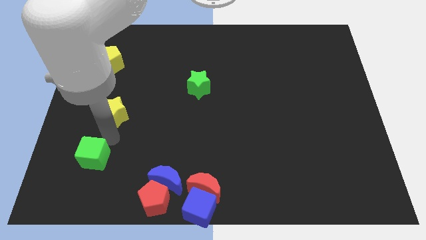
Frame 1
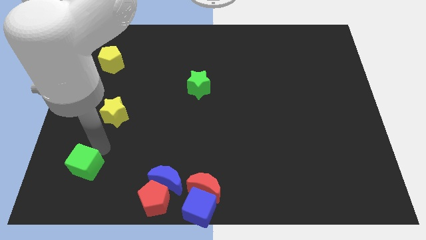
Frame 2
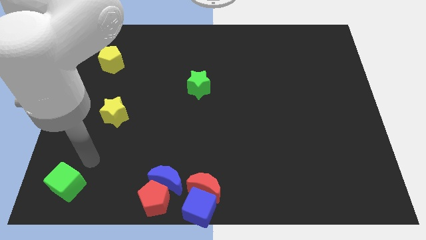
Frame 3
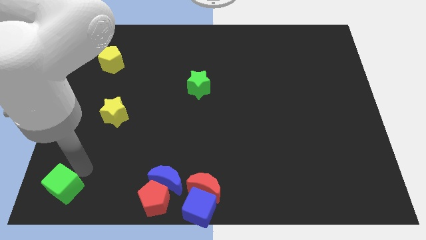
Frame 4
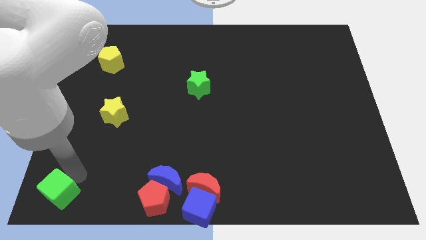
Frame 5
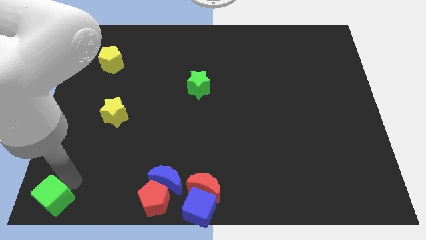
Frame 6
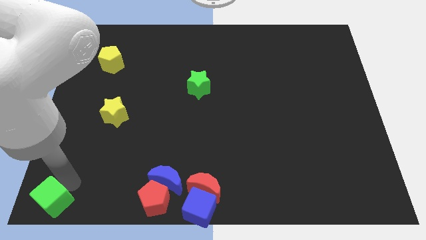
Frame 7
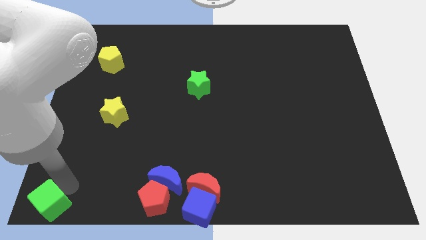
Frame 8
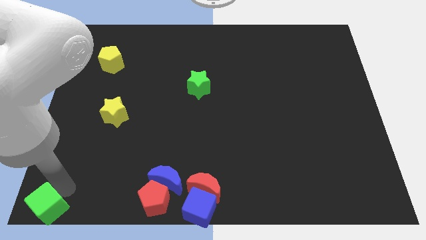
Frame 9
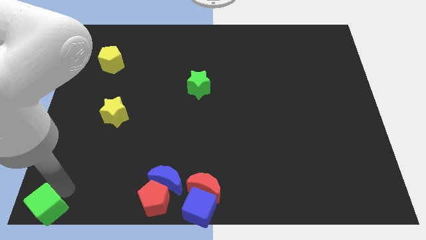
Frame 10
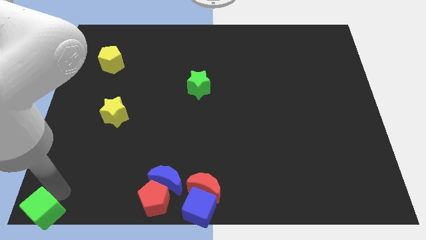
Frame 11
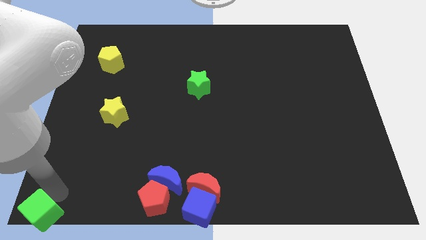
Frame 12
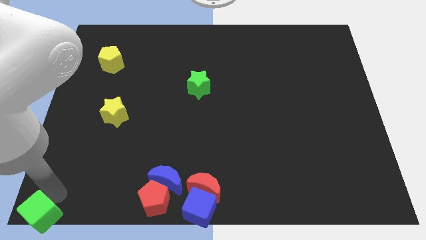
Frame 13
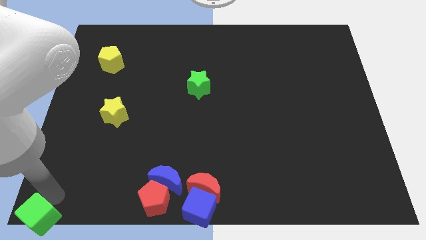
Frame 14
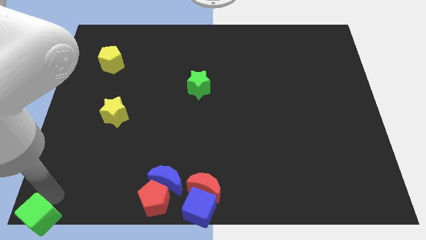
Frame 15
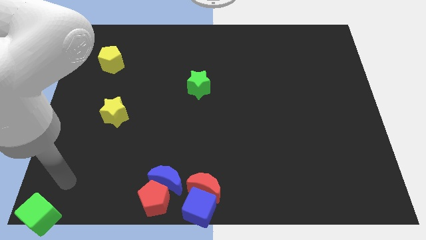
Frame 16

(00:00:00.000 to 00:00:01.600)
push the green cube to the bottom left on the board

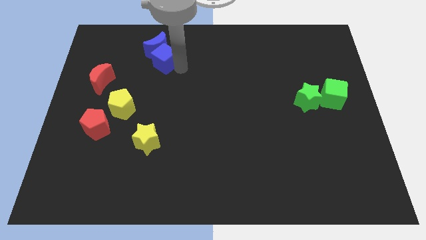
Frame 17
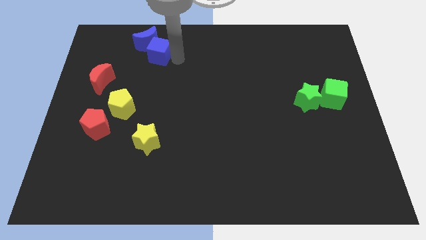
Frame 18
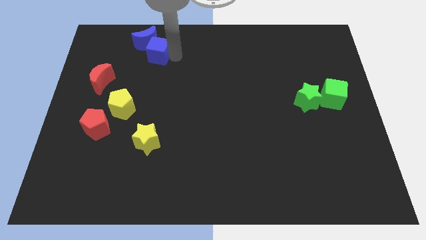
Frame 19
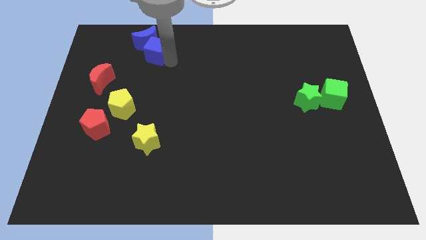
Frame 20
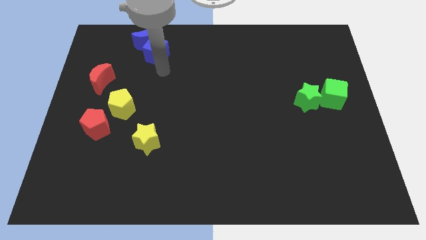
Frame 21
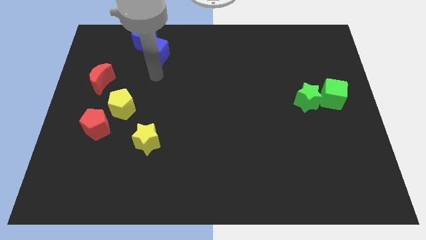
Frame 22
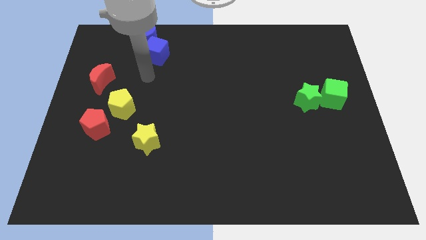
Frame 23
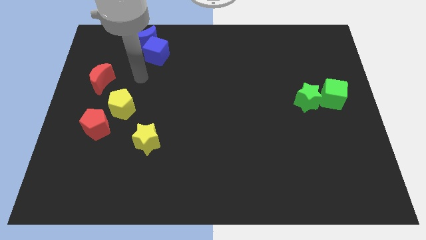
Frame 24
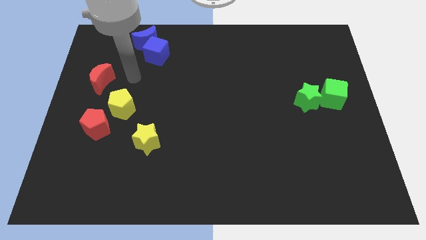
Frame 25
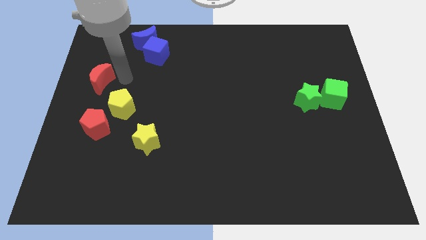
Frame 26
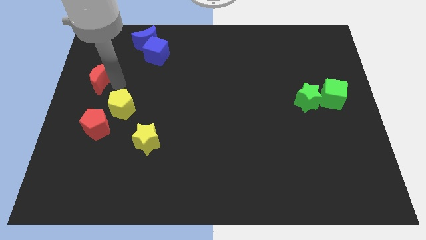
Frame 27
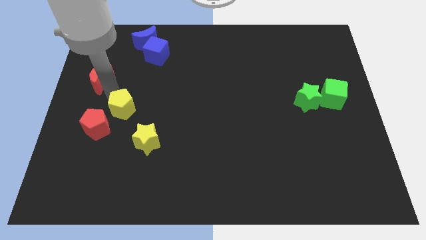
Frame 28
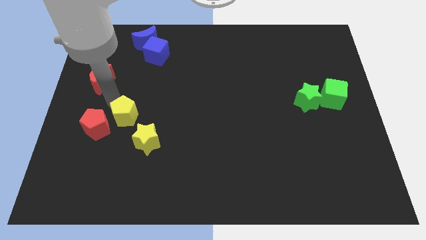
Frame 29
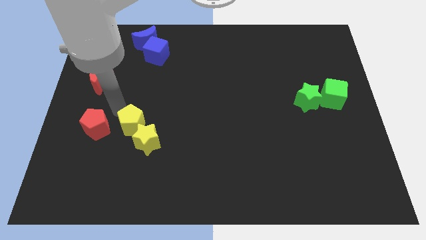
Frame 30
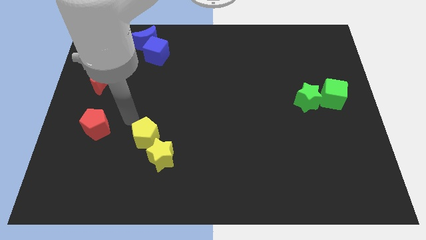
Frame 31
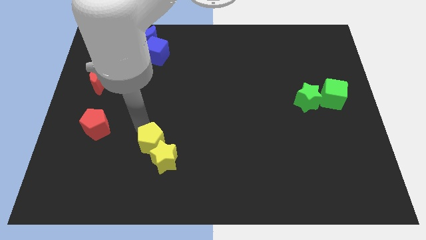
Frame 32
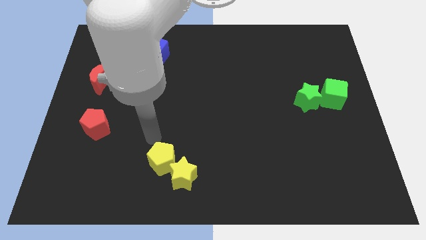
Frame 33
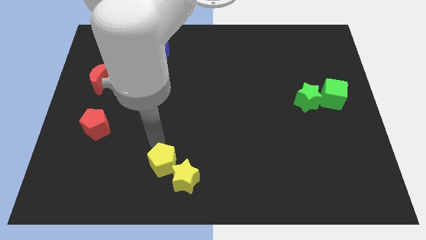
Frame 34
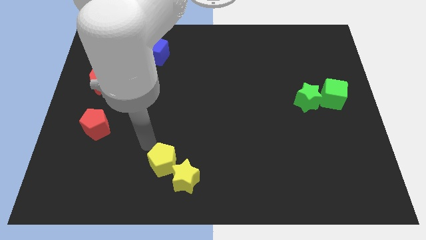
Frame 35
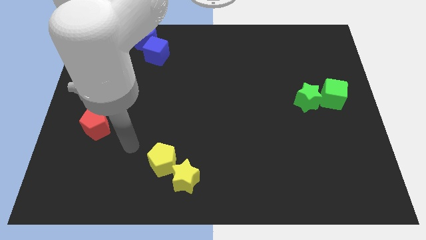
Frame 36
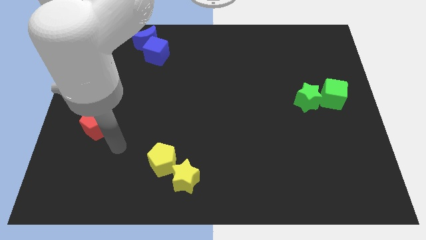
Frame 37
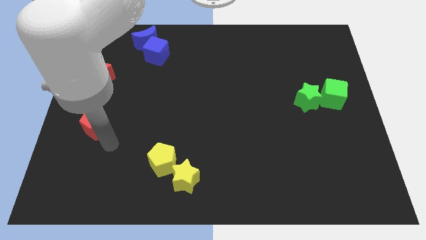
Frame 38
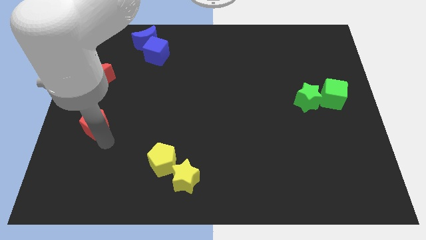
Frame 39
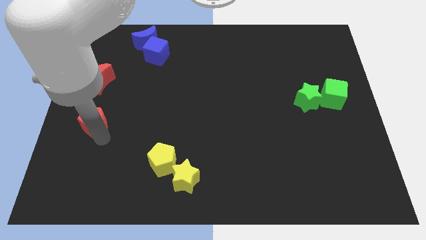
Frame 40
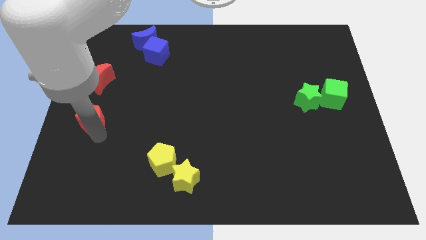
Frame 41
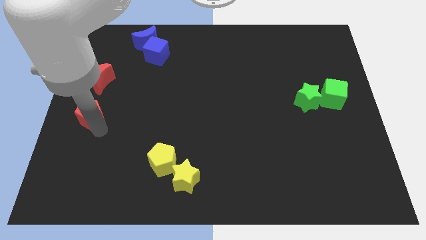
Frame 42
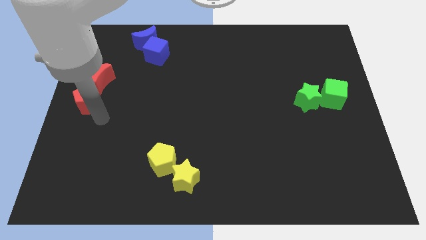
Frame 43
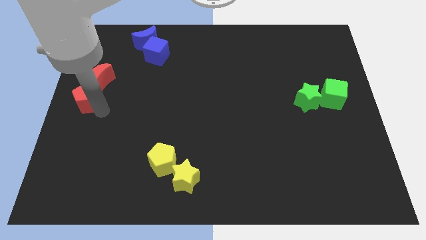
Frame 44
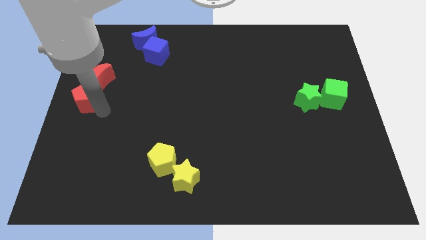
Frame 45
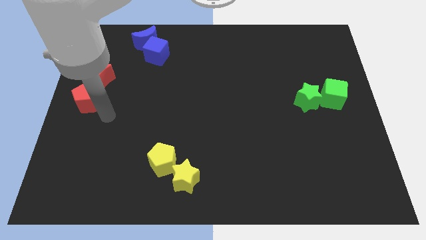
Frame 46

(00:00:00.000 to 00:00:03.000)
separate the red blocks and yellow blocks

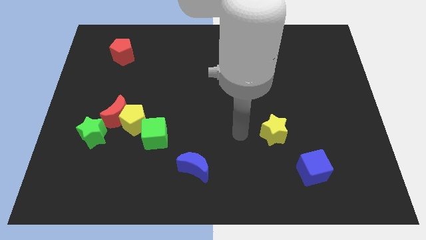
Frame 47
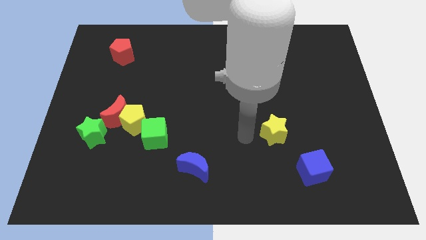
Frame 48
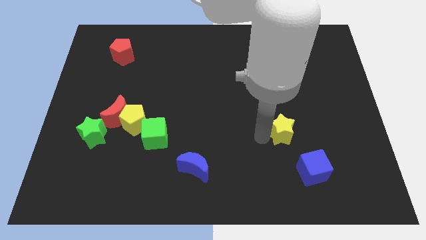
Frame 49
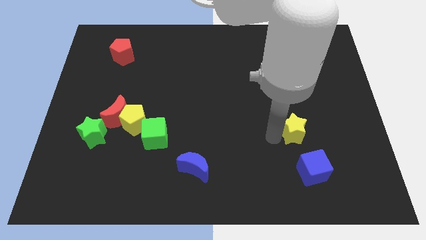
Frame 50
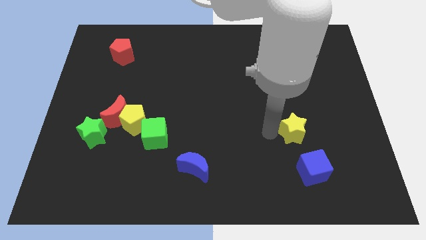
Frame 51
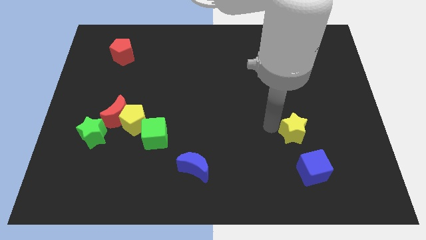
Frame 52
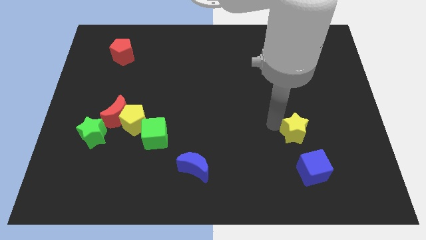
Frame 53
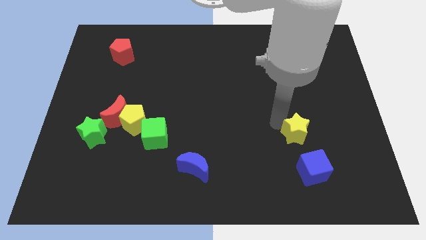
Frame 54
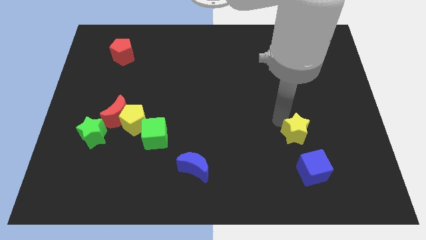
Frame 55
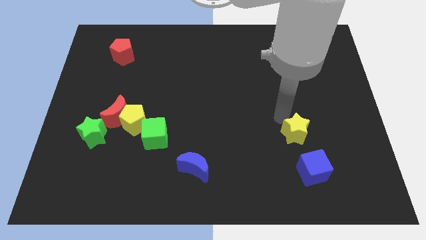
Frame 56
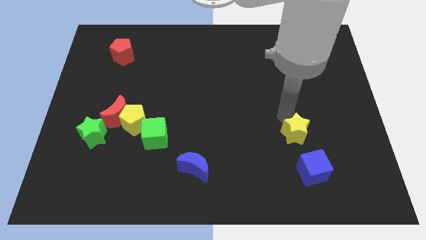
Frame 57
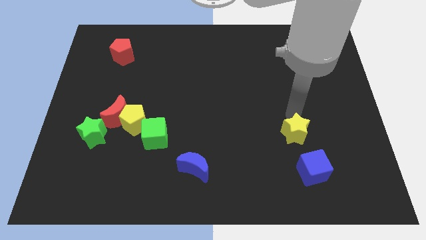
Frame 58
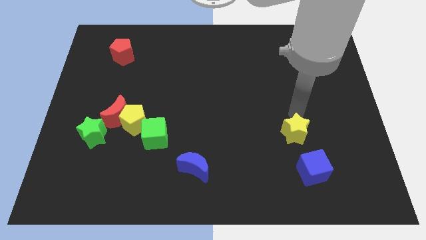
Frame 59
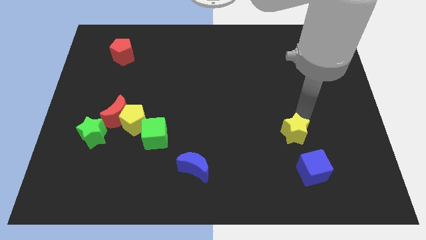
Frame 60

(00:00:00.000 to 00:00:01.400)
place the yellow star vertically above the blue cube

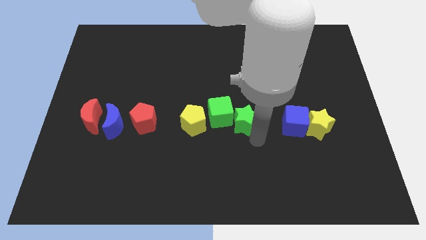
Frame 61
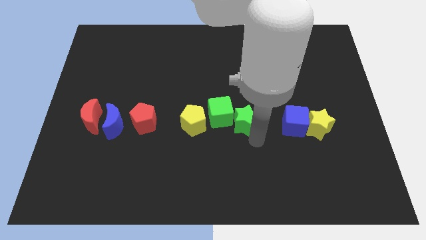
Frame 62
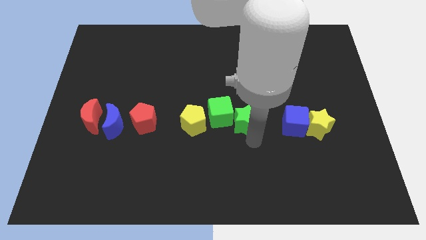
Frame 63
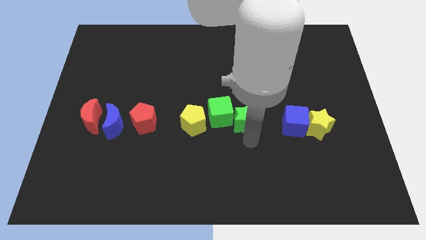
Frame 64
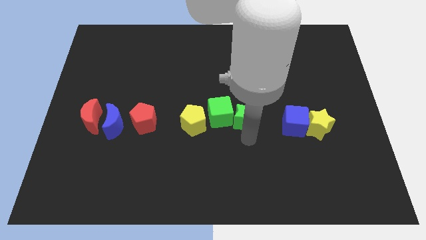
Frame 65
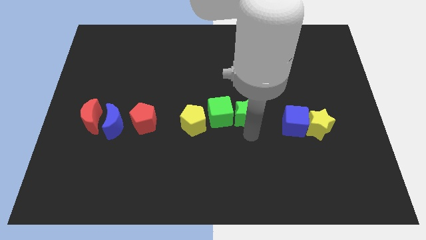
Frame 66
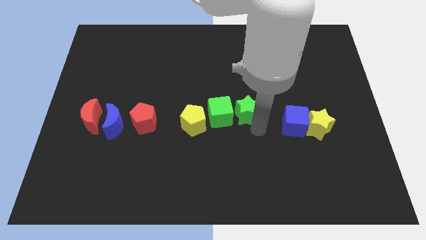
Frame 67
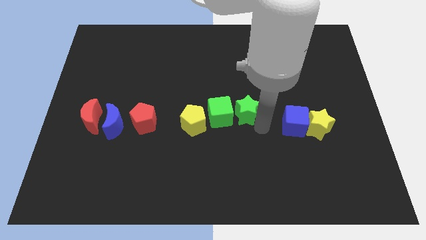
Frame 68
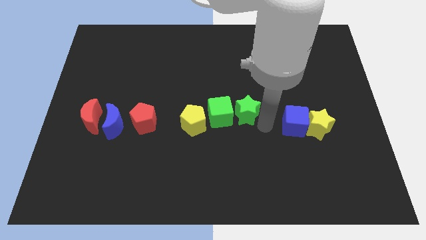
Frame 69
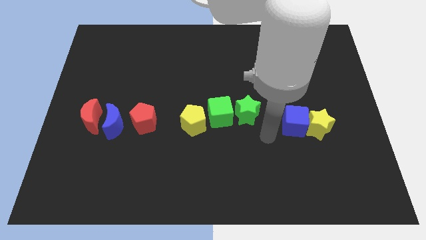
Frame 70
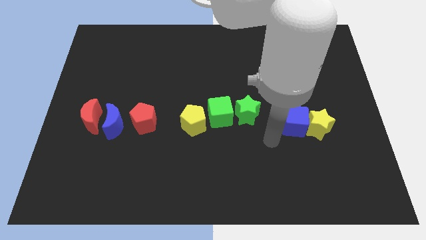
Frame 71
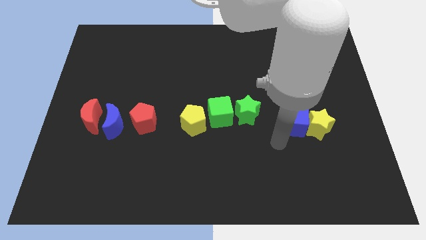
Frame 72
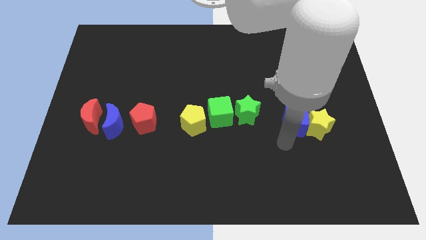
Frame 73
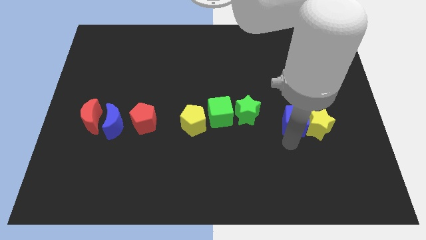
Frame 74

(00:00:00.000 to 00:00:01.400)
slide the green star slightly towards the top side

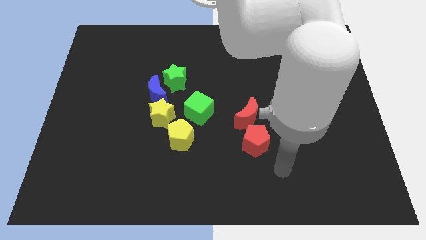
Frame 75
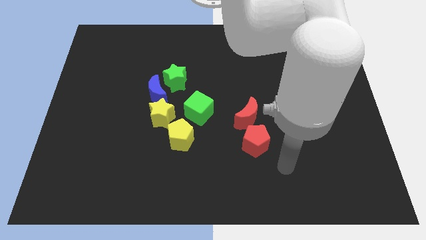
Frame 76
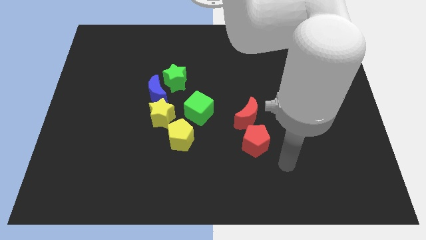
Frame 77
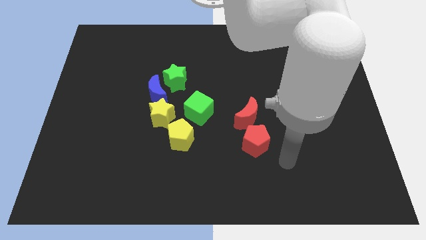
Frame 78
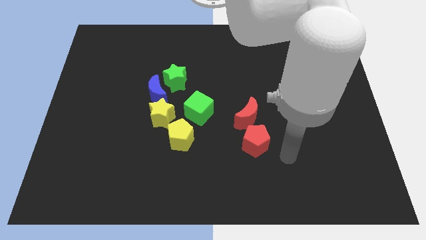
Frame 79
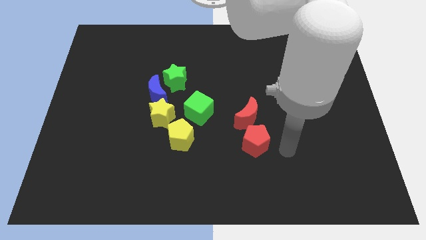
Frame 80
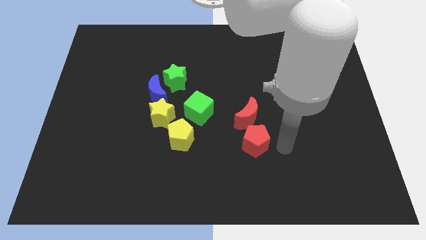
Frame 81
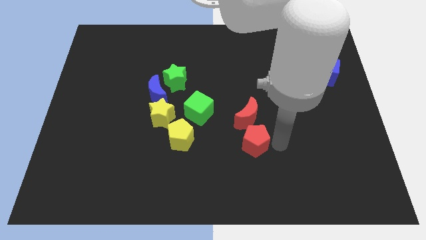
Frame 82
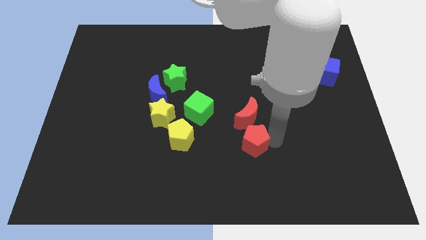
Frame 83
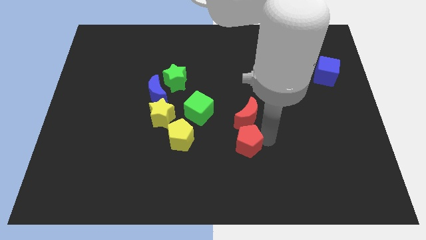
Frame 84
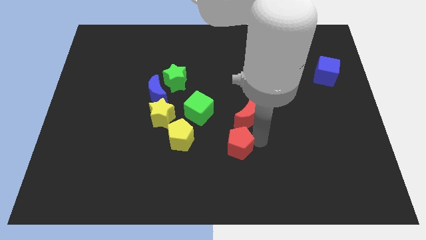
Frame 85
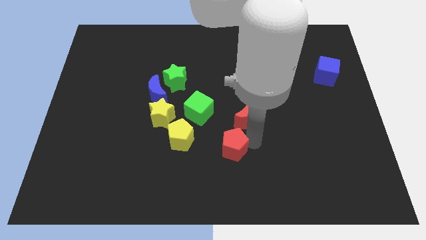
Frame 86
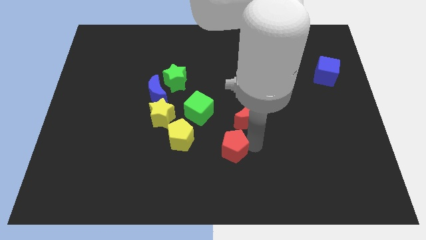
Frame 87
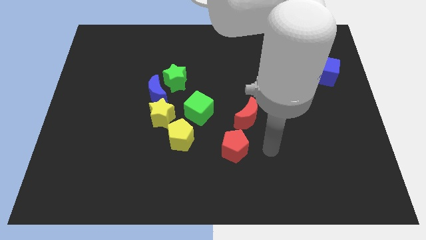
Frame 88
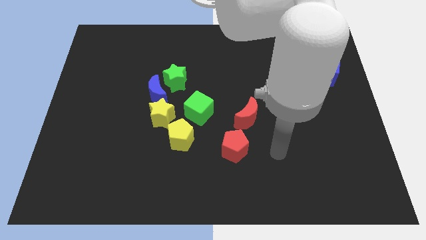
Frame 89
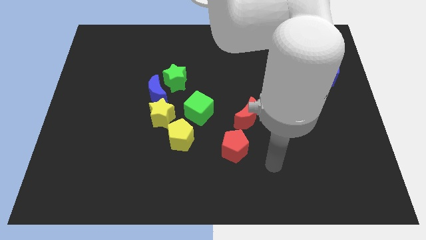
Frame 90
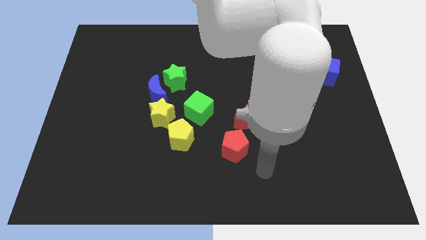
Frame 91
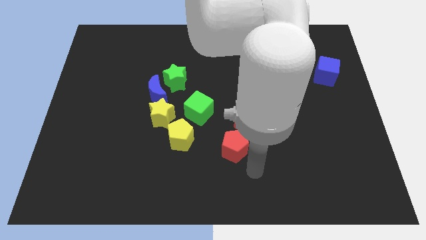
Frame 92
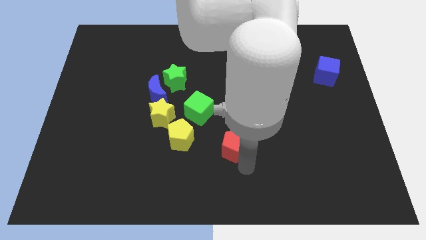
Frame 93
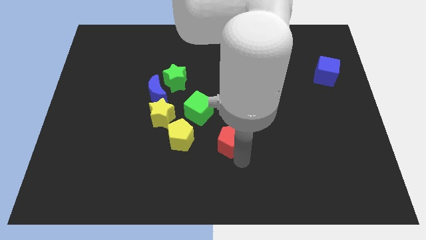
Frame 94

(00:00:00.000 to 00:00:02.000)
push the red pentagon towards the green cube
